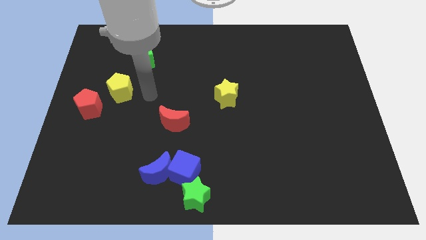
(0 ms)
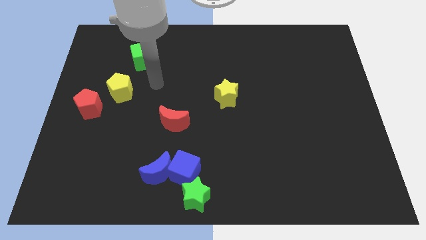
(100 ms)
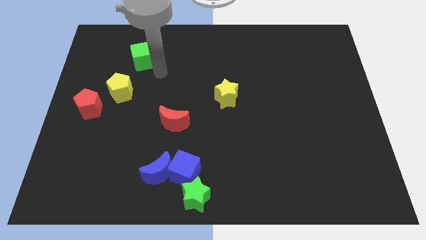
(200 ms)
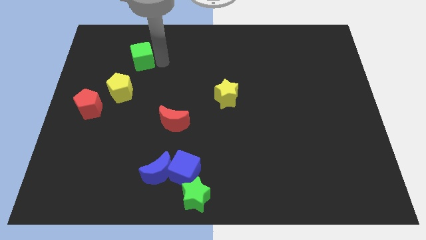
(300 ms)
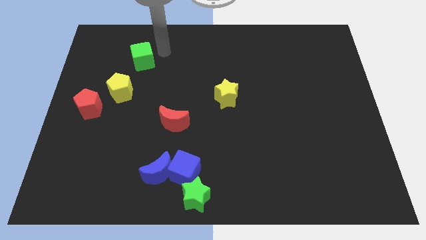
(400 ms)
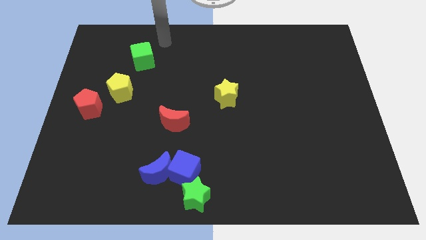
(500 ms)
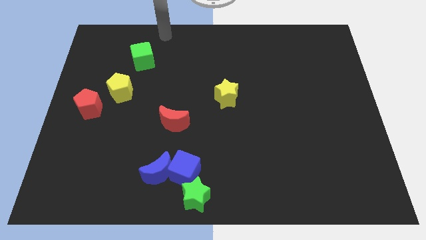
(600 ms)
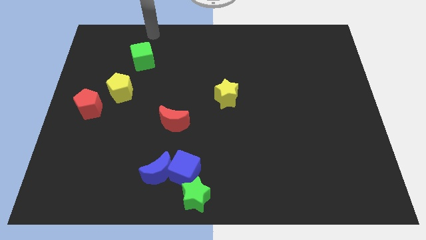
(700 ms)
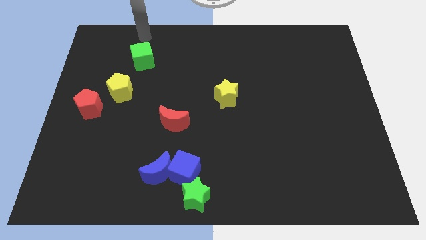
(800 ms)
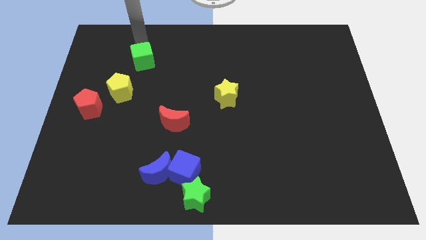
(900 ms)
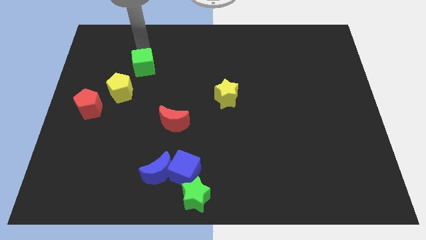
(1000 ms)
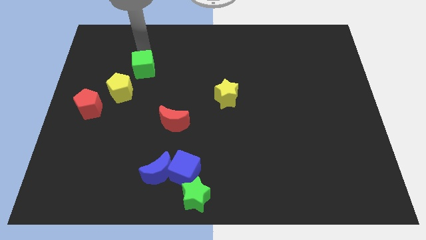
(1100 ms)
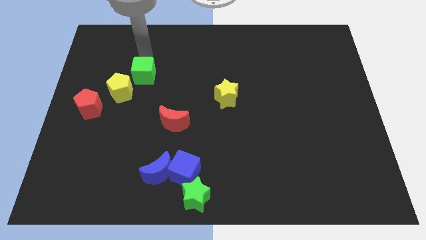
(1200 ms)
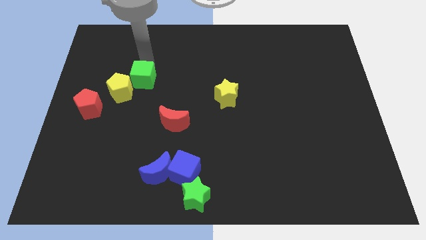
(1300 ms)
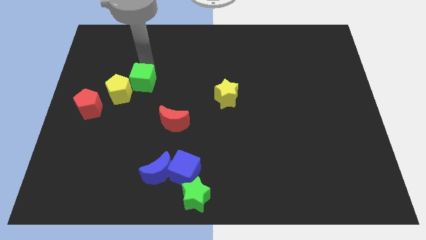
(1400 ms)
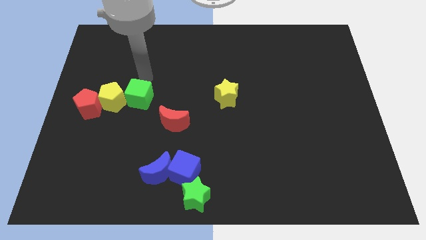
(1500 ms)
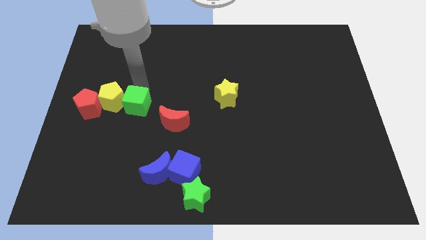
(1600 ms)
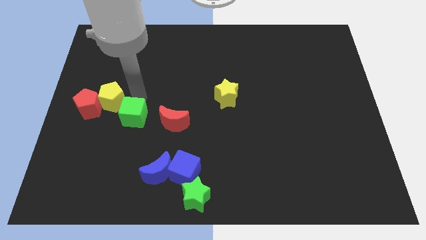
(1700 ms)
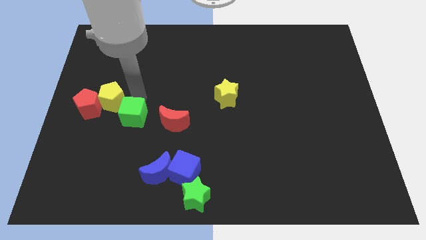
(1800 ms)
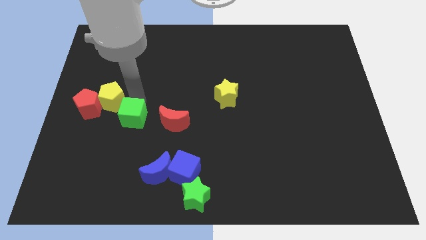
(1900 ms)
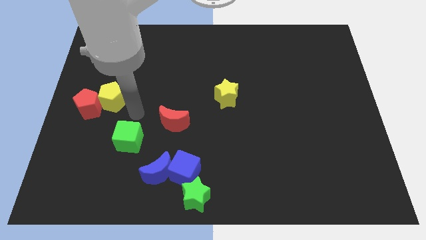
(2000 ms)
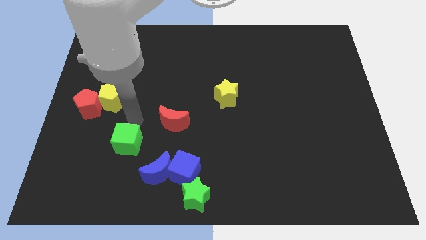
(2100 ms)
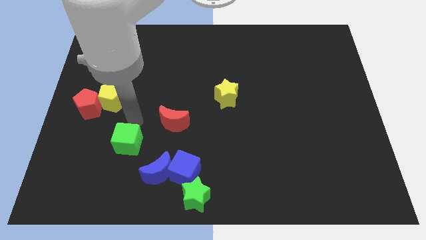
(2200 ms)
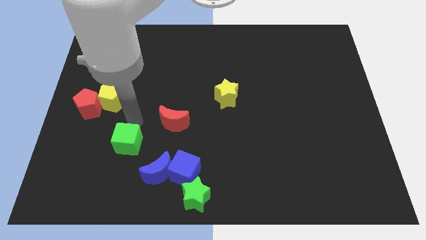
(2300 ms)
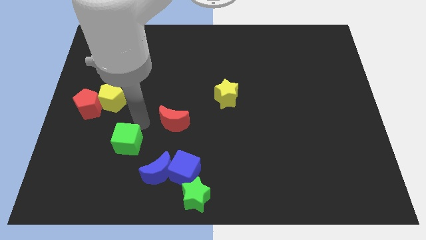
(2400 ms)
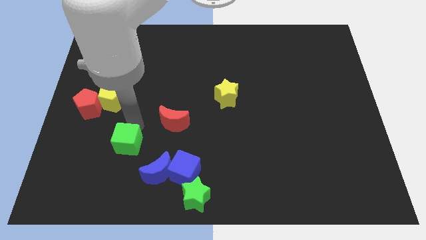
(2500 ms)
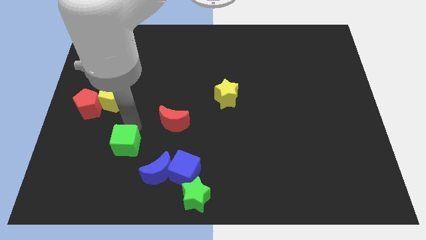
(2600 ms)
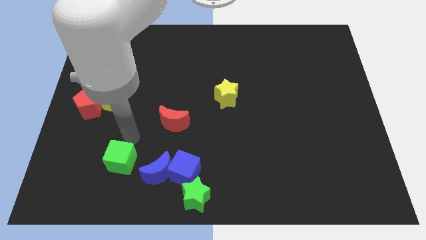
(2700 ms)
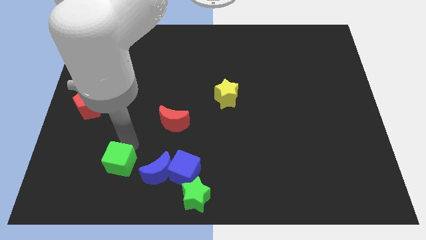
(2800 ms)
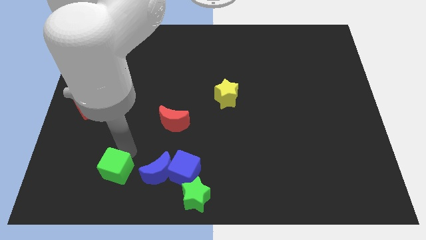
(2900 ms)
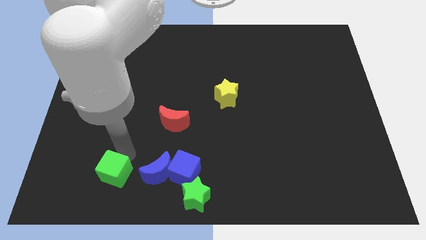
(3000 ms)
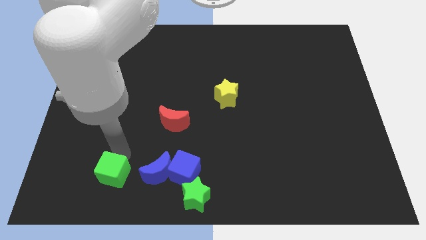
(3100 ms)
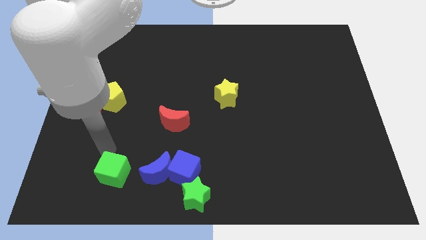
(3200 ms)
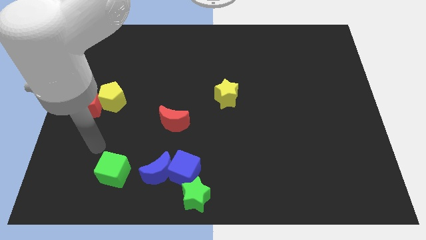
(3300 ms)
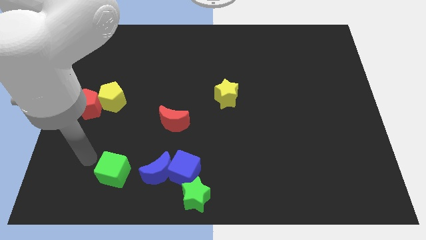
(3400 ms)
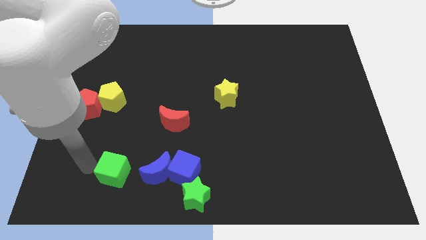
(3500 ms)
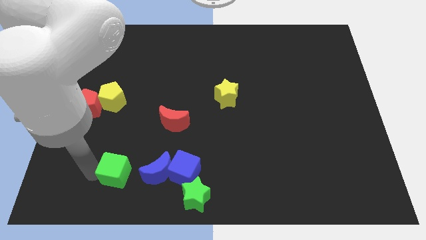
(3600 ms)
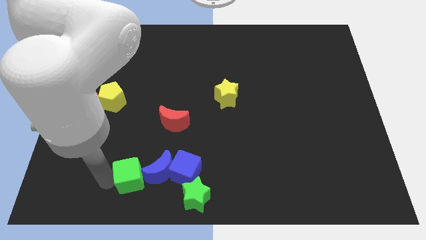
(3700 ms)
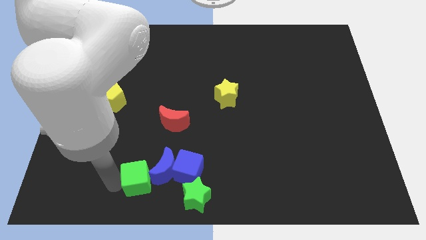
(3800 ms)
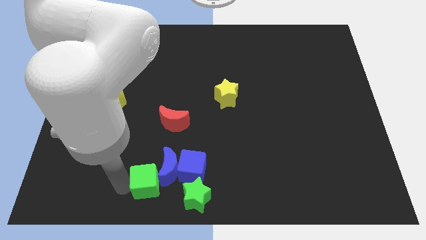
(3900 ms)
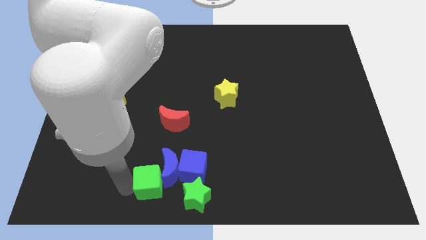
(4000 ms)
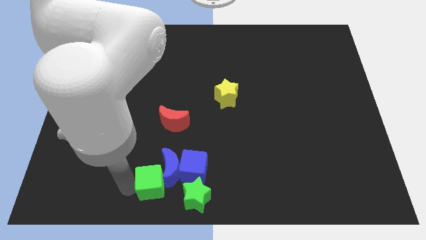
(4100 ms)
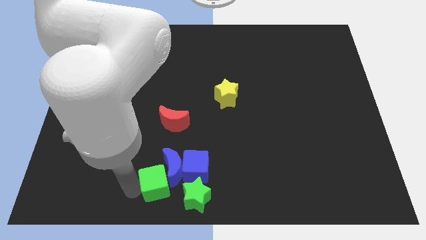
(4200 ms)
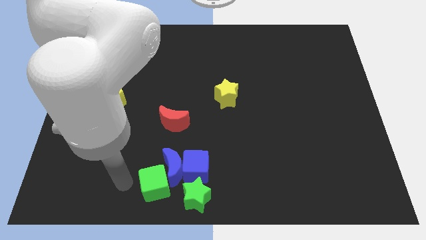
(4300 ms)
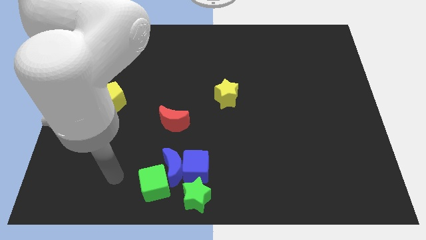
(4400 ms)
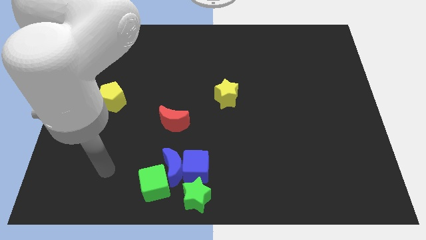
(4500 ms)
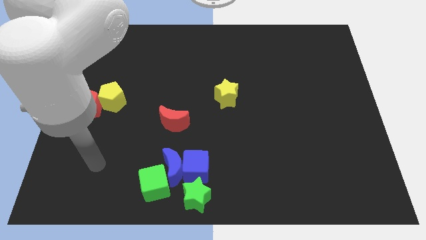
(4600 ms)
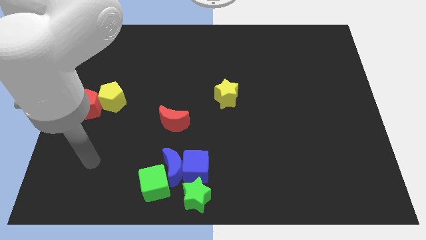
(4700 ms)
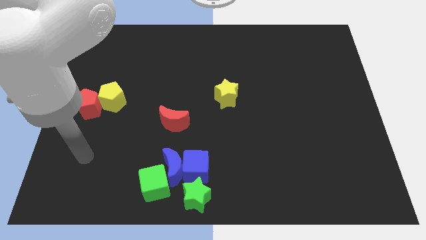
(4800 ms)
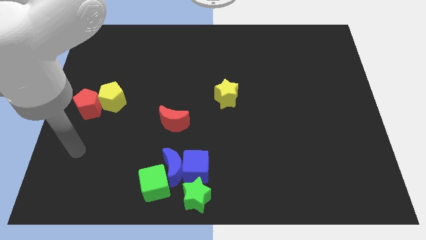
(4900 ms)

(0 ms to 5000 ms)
place the green cube beside the blue crescent

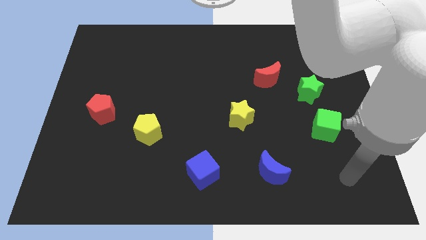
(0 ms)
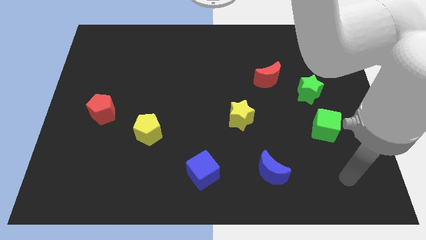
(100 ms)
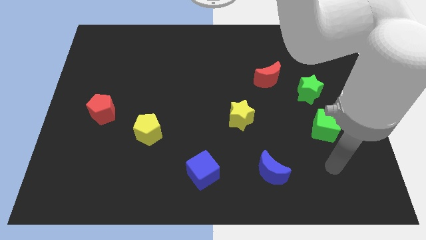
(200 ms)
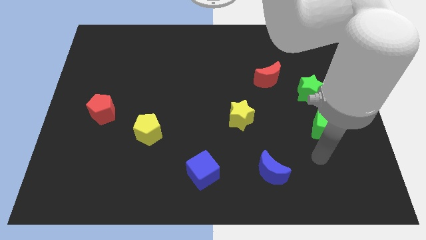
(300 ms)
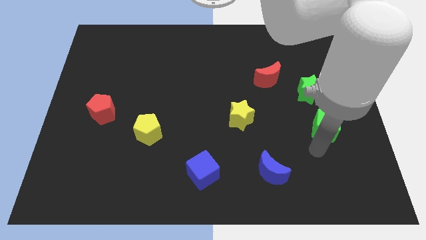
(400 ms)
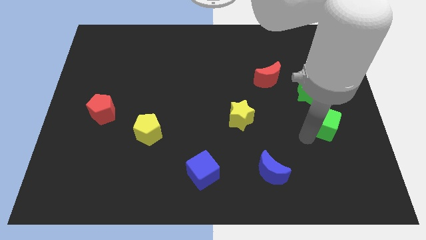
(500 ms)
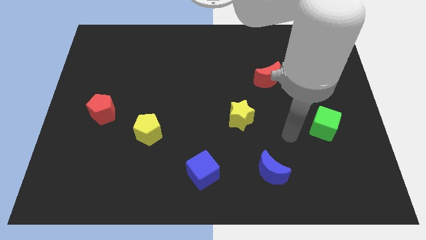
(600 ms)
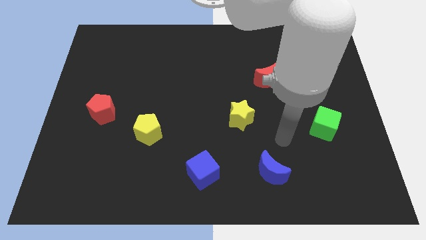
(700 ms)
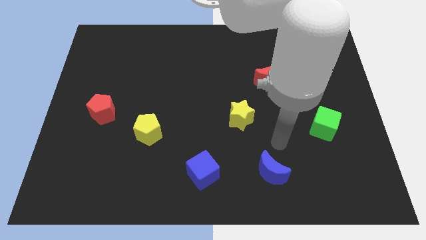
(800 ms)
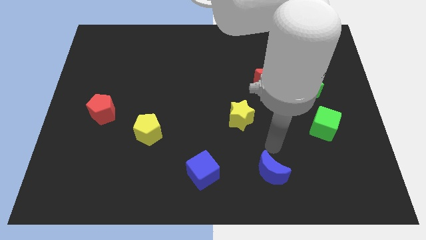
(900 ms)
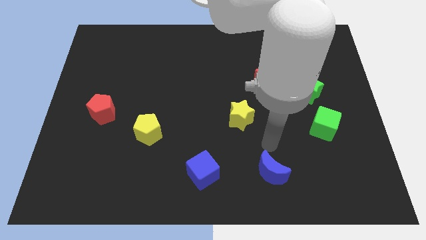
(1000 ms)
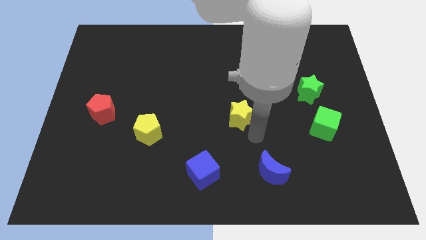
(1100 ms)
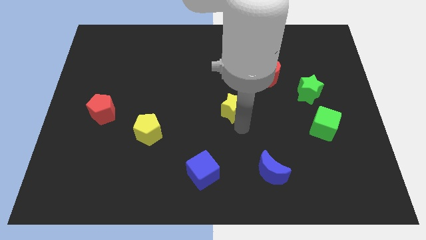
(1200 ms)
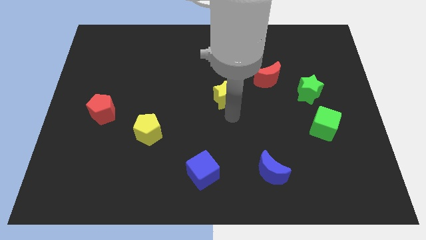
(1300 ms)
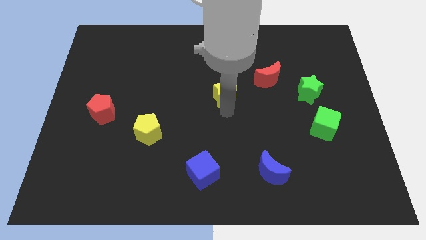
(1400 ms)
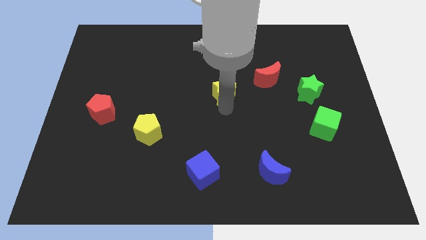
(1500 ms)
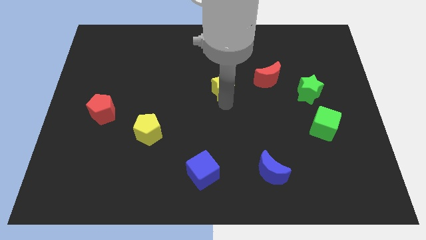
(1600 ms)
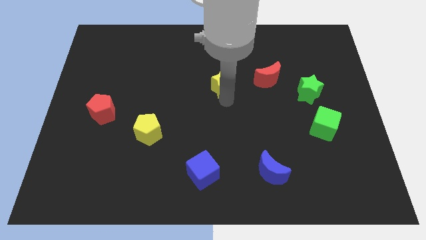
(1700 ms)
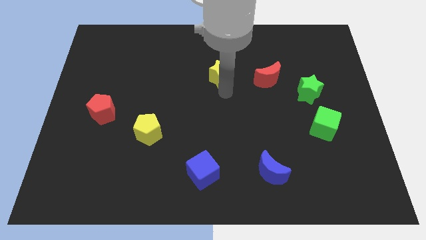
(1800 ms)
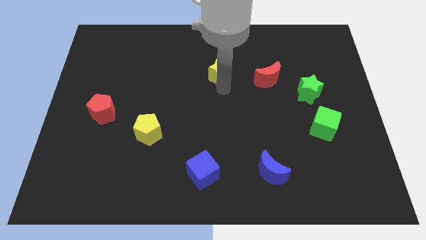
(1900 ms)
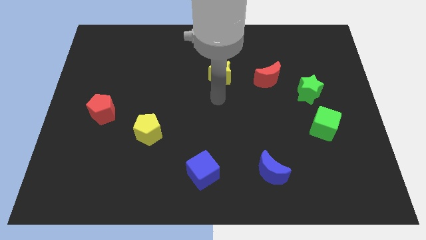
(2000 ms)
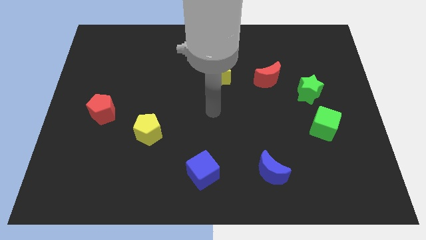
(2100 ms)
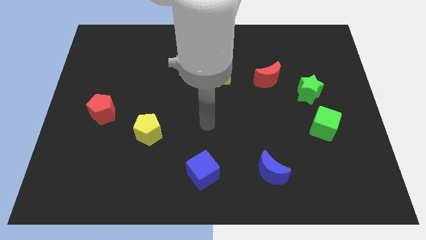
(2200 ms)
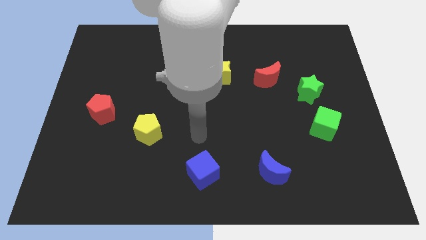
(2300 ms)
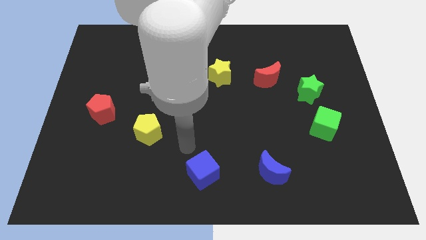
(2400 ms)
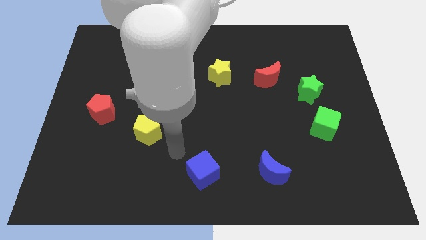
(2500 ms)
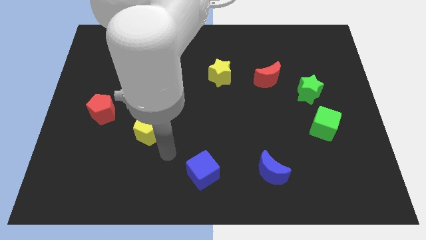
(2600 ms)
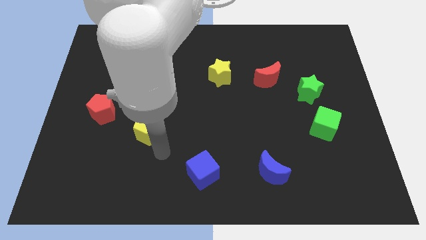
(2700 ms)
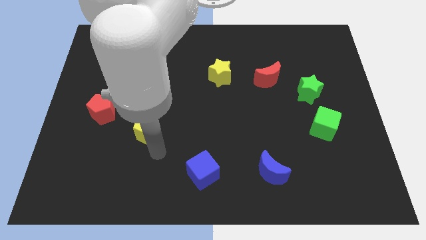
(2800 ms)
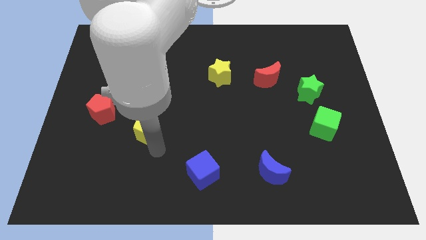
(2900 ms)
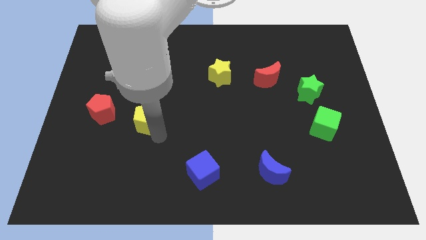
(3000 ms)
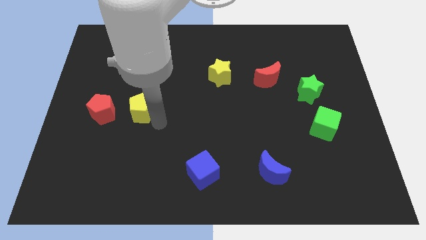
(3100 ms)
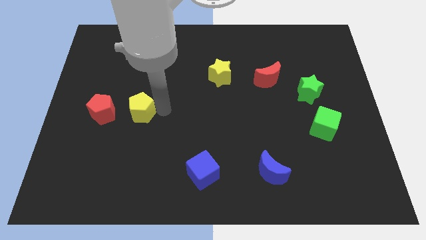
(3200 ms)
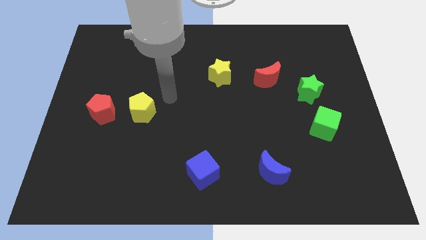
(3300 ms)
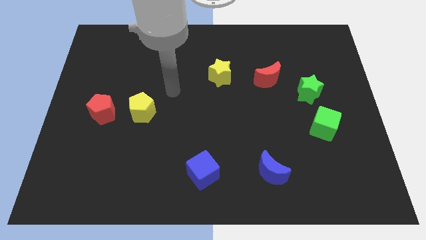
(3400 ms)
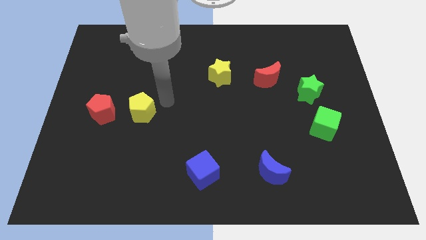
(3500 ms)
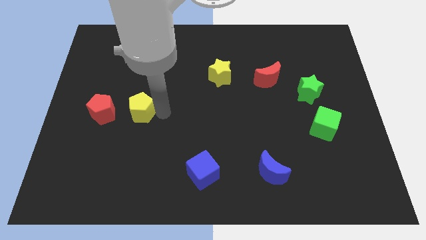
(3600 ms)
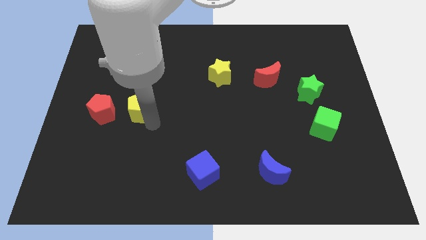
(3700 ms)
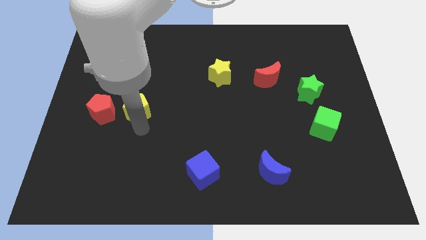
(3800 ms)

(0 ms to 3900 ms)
push the yellow star and yellow pentagon upwards

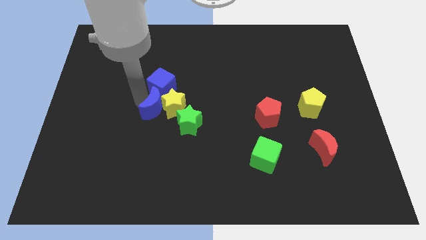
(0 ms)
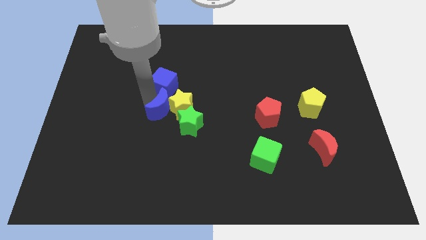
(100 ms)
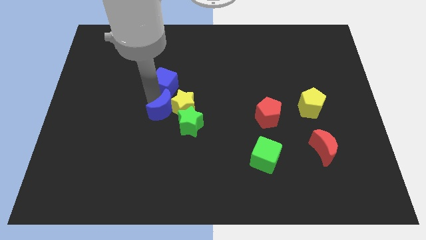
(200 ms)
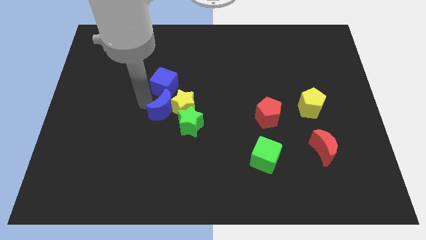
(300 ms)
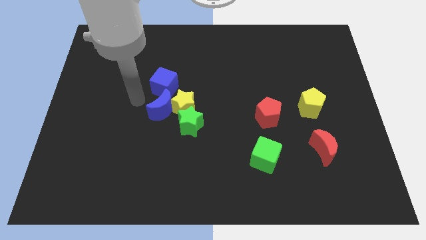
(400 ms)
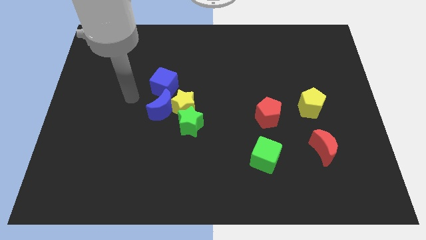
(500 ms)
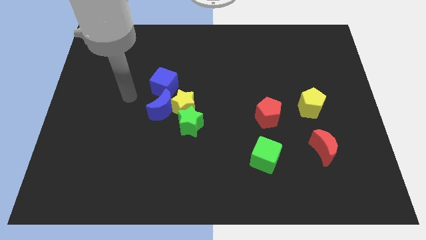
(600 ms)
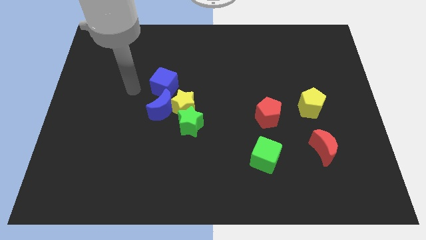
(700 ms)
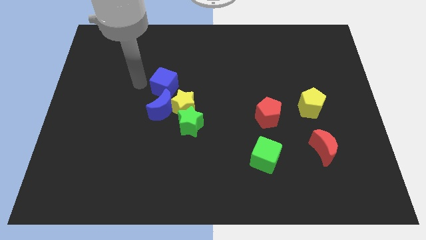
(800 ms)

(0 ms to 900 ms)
push blue moon into the yellow star
